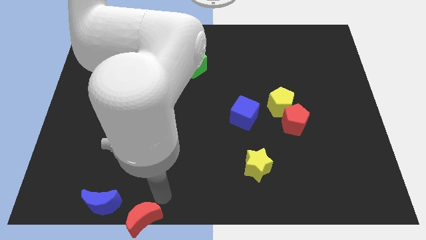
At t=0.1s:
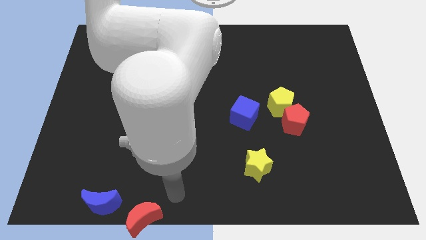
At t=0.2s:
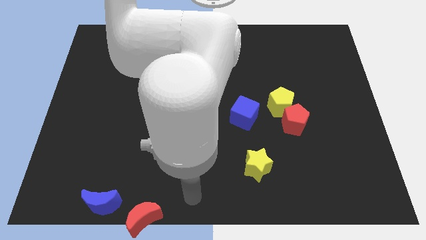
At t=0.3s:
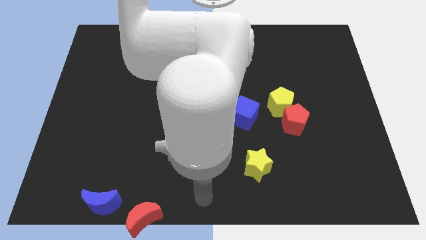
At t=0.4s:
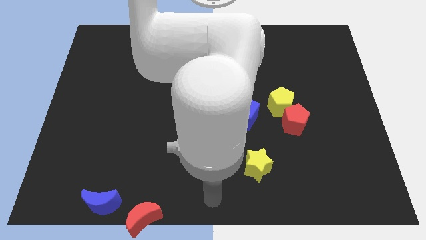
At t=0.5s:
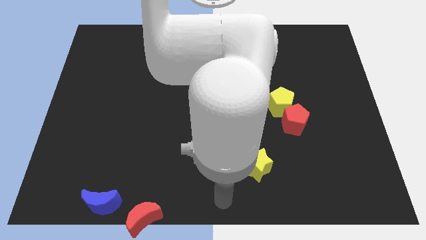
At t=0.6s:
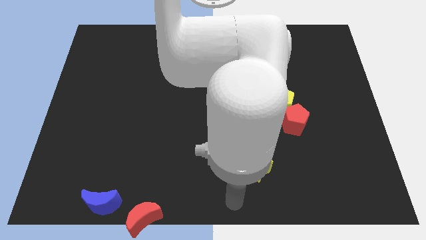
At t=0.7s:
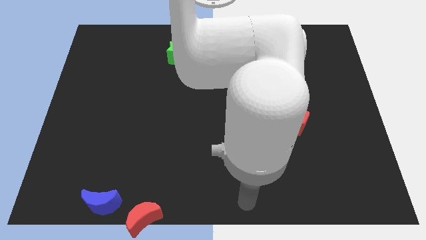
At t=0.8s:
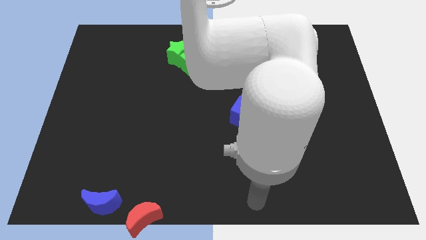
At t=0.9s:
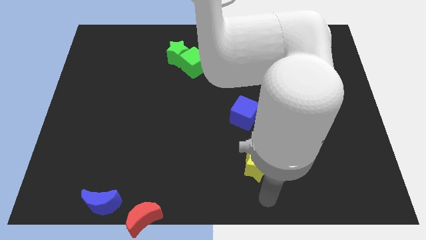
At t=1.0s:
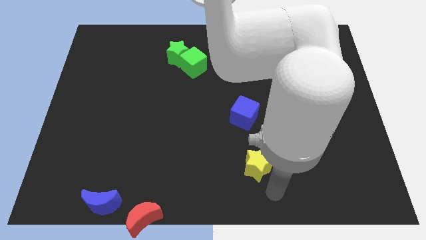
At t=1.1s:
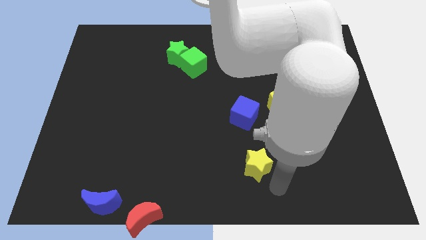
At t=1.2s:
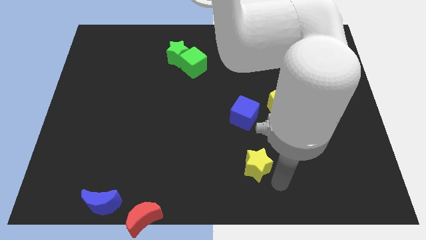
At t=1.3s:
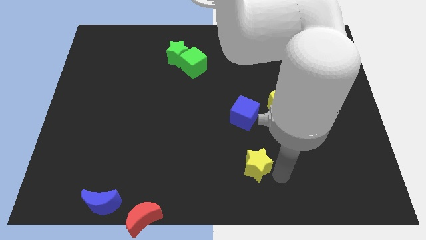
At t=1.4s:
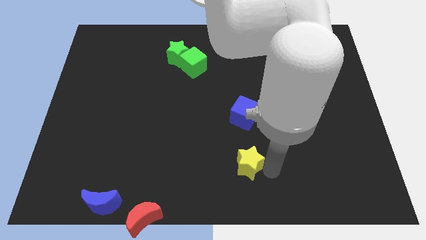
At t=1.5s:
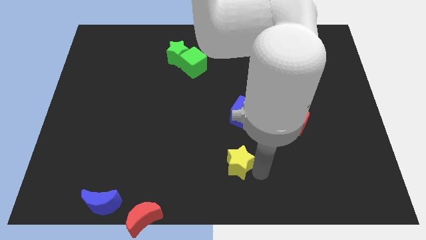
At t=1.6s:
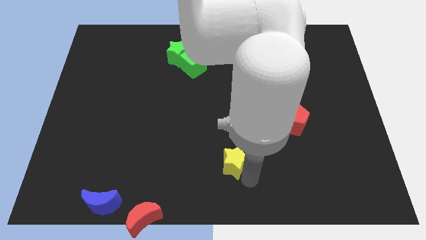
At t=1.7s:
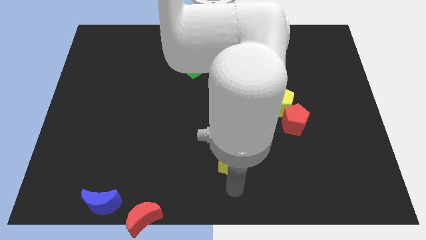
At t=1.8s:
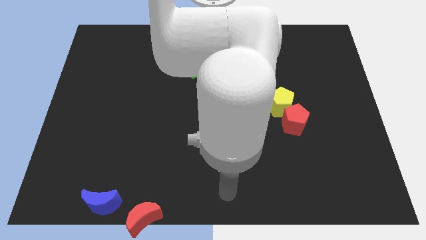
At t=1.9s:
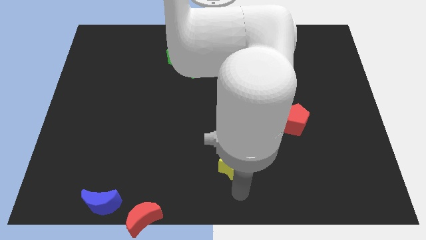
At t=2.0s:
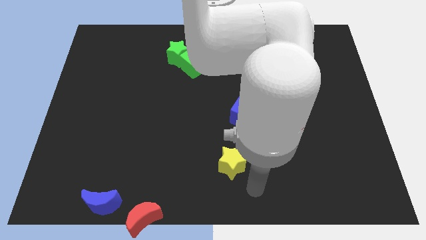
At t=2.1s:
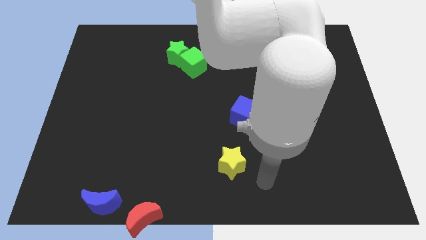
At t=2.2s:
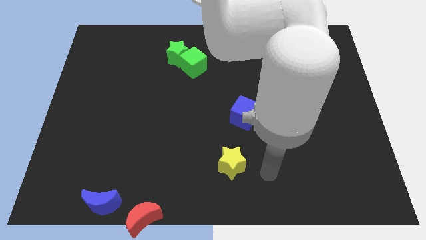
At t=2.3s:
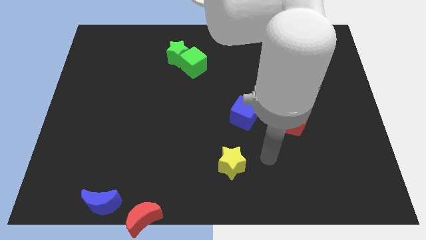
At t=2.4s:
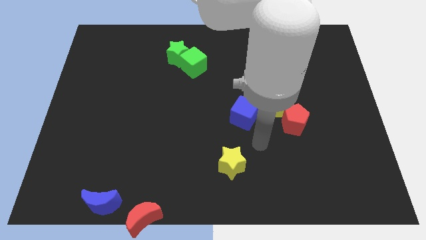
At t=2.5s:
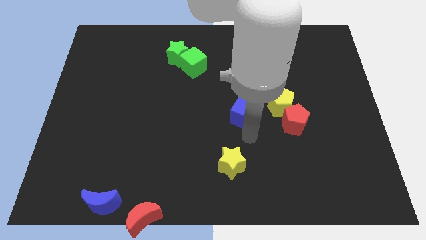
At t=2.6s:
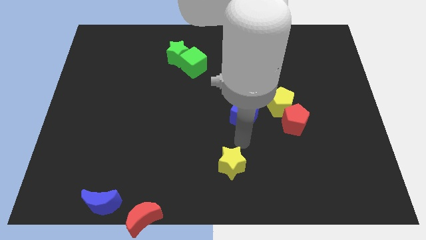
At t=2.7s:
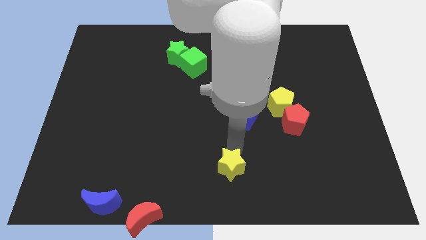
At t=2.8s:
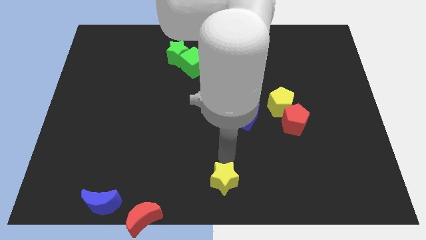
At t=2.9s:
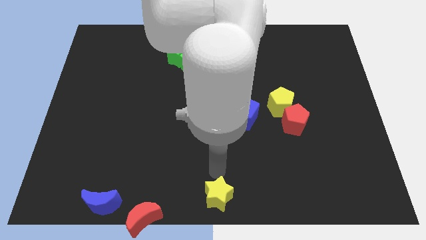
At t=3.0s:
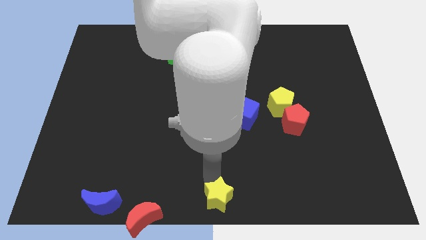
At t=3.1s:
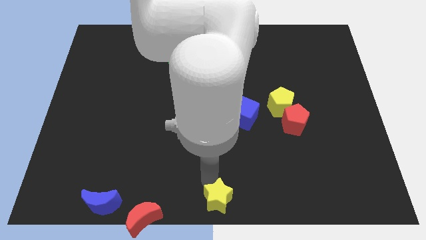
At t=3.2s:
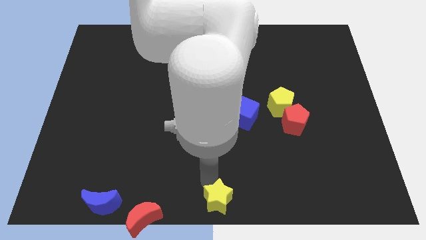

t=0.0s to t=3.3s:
move the yellow star to the bottom center of the board

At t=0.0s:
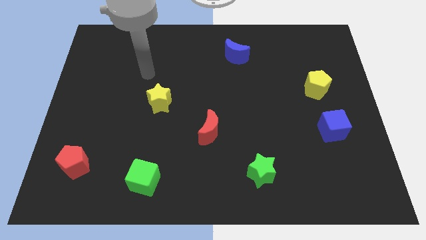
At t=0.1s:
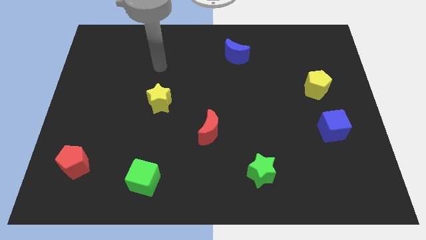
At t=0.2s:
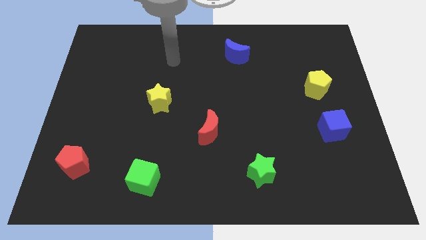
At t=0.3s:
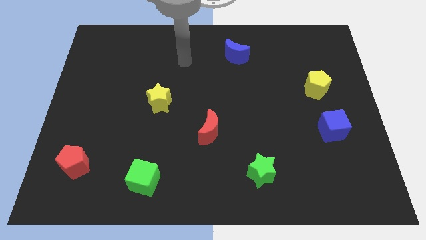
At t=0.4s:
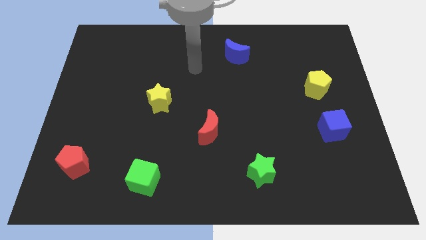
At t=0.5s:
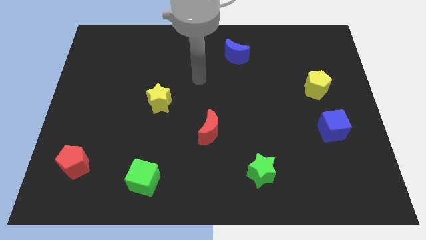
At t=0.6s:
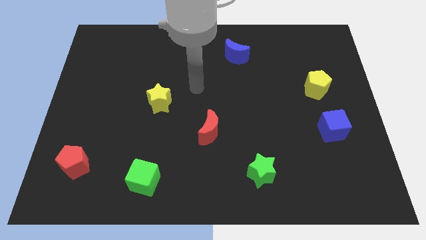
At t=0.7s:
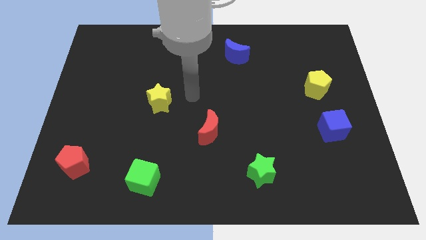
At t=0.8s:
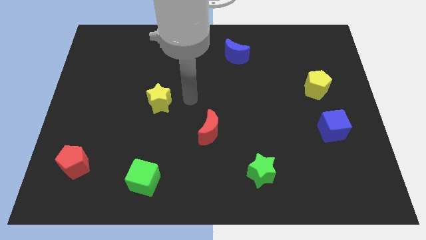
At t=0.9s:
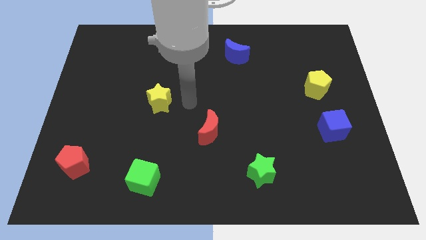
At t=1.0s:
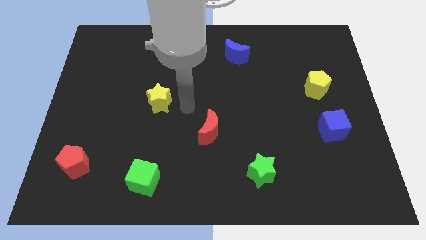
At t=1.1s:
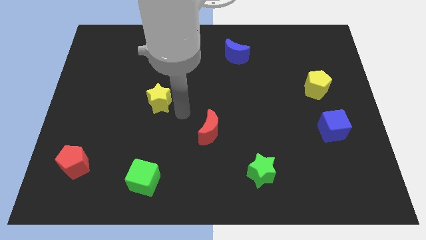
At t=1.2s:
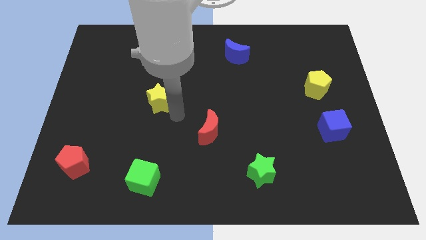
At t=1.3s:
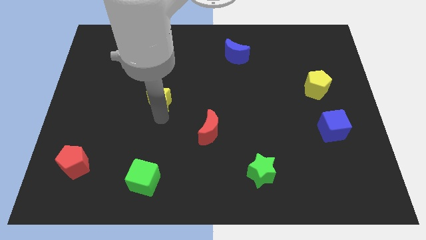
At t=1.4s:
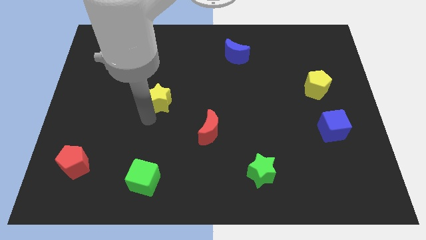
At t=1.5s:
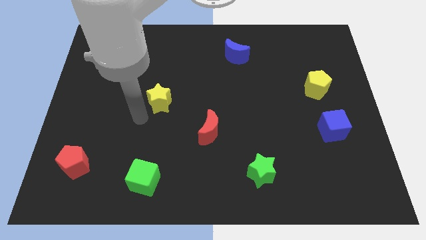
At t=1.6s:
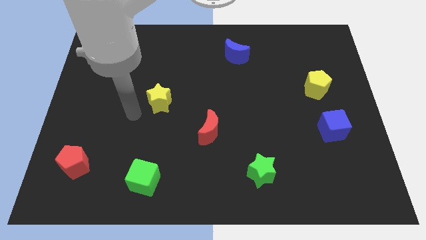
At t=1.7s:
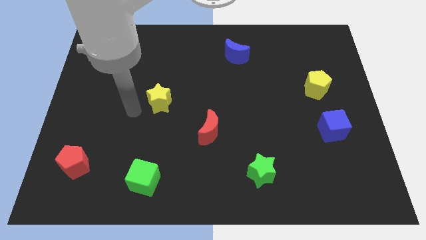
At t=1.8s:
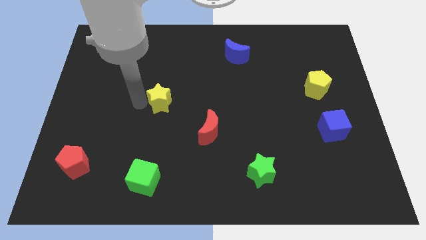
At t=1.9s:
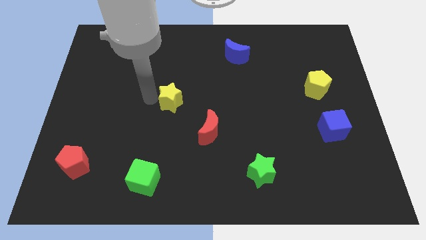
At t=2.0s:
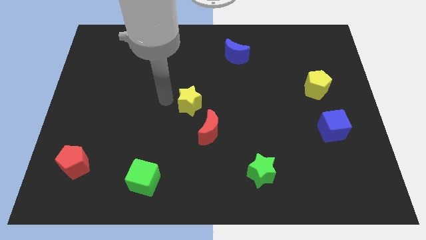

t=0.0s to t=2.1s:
push the yellow star to a bit right

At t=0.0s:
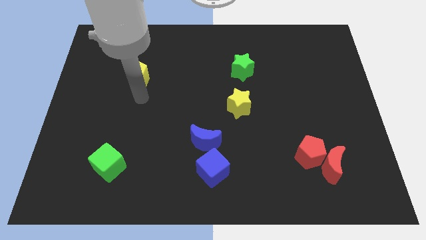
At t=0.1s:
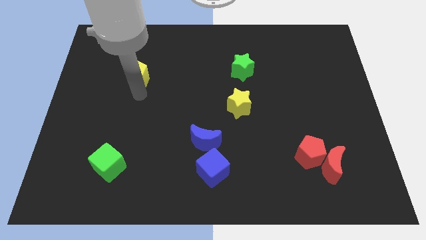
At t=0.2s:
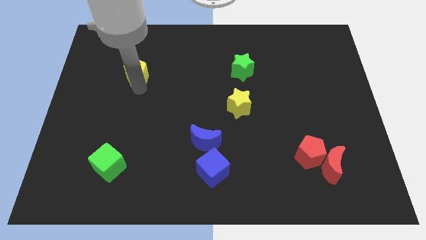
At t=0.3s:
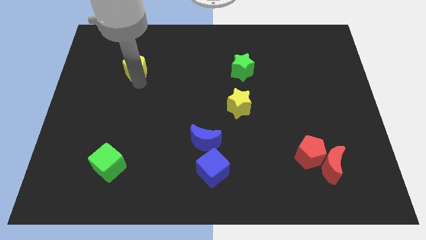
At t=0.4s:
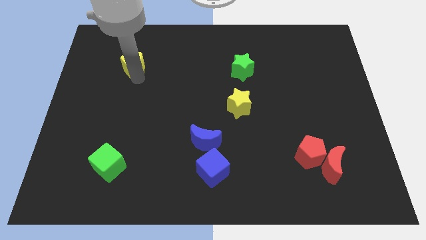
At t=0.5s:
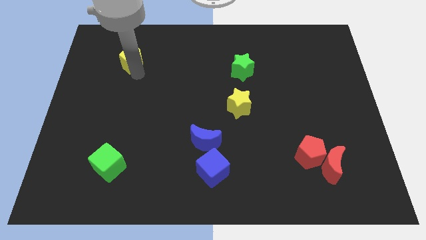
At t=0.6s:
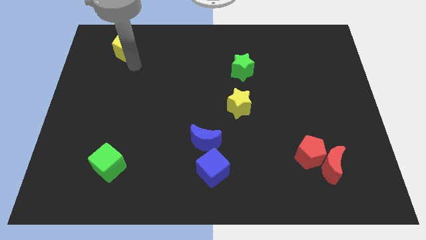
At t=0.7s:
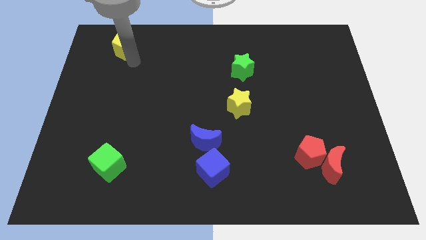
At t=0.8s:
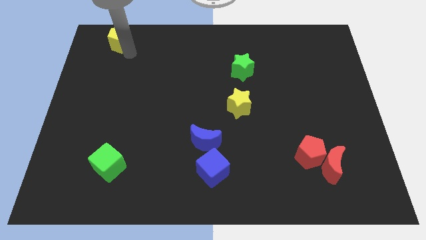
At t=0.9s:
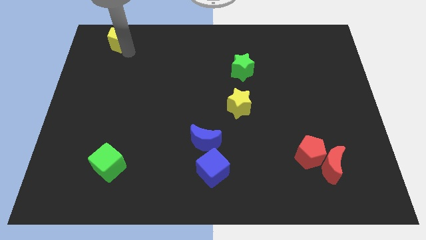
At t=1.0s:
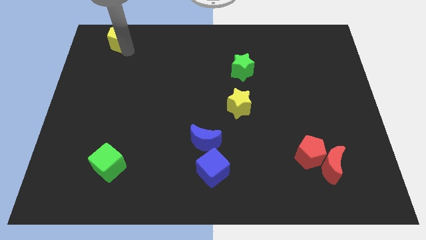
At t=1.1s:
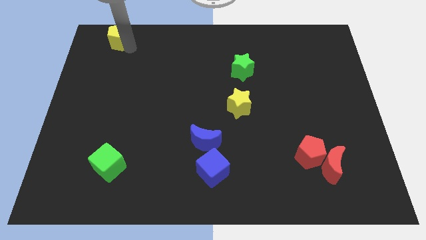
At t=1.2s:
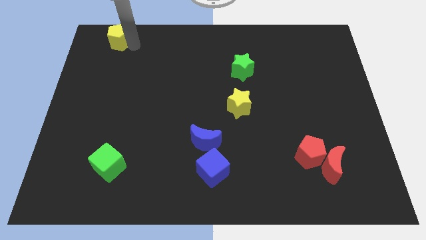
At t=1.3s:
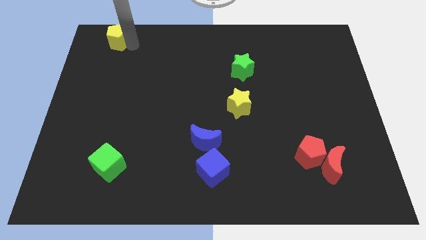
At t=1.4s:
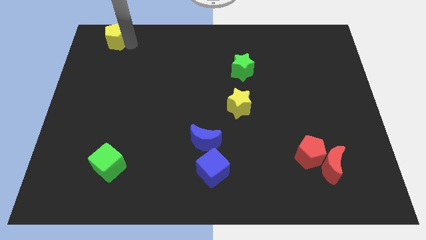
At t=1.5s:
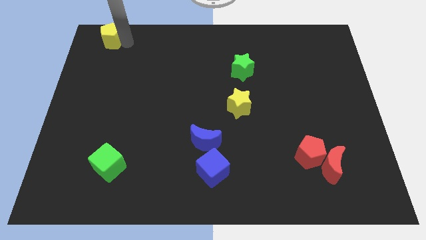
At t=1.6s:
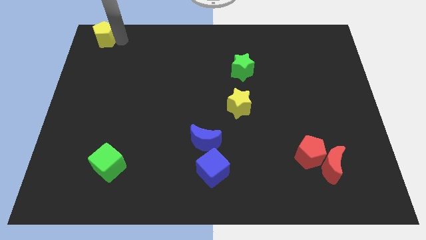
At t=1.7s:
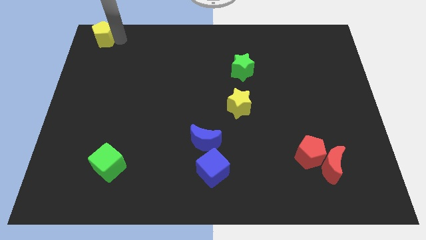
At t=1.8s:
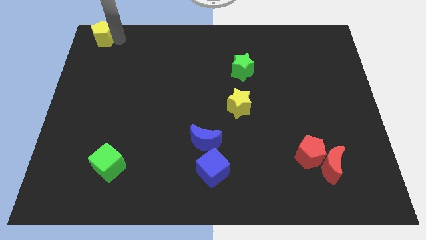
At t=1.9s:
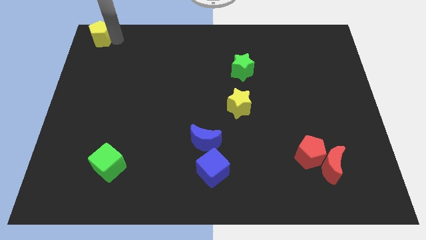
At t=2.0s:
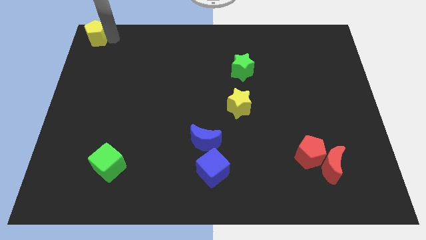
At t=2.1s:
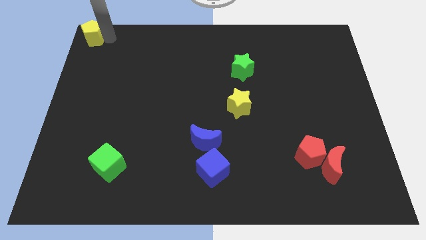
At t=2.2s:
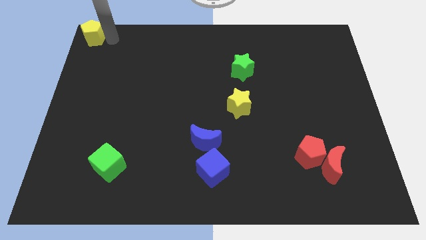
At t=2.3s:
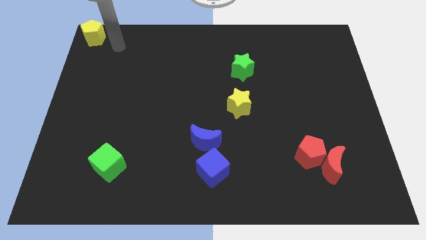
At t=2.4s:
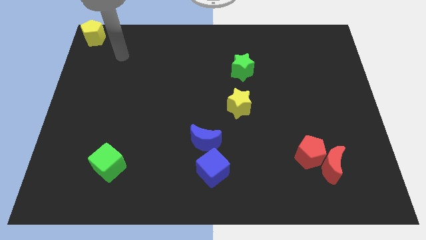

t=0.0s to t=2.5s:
move the yellow pentagon to the top left corner

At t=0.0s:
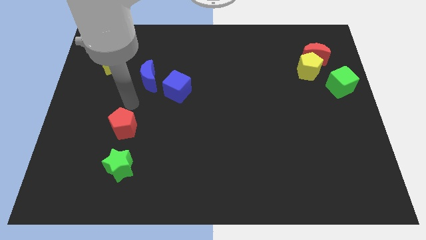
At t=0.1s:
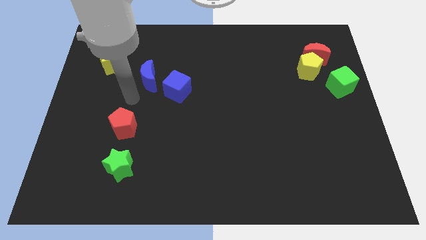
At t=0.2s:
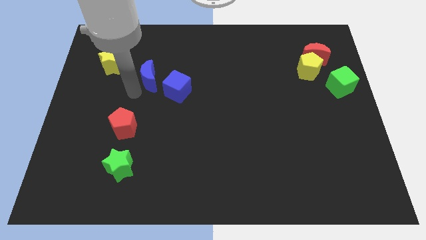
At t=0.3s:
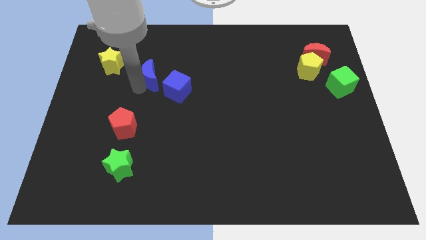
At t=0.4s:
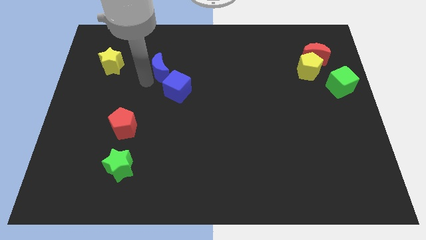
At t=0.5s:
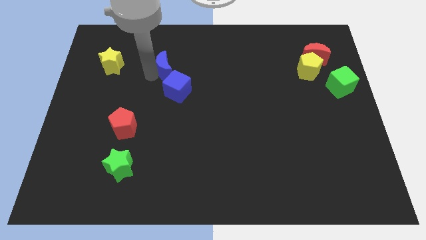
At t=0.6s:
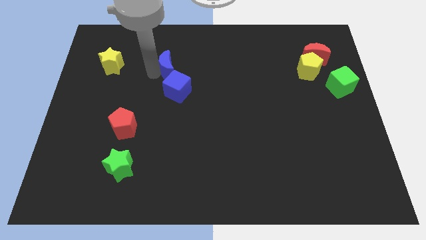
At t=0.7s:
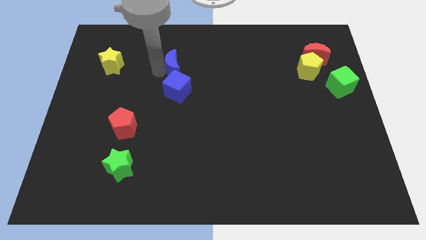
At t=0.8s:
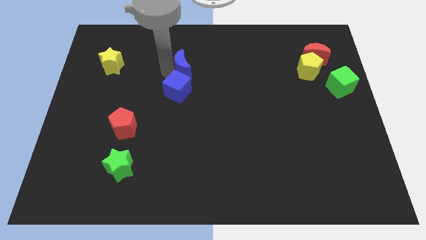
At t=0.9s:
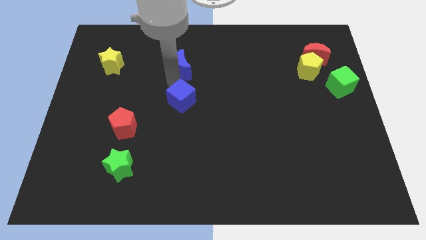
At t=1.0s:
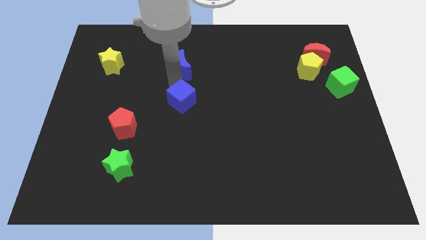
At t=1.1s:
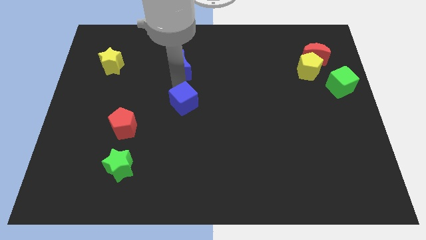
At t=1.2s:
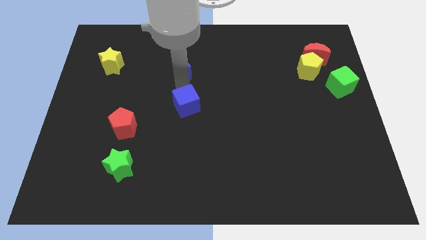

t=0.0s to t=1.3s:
move the blue moon to the top side of the blue cube
